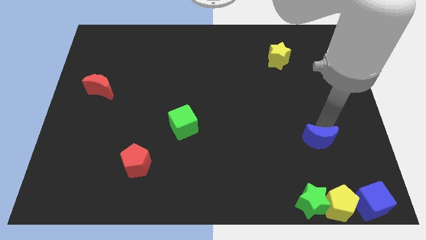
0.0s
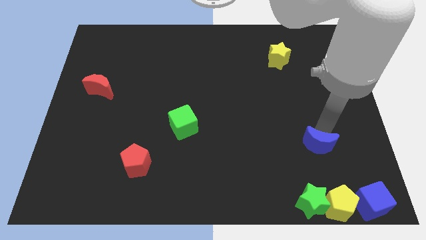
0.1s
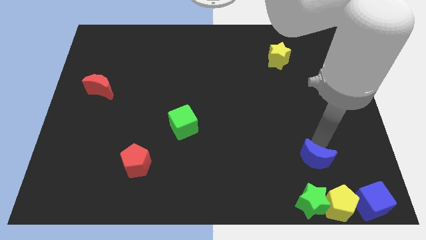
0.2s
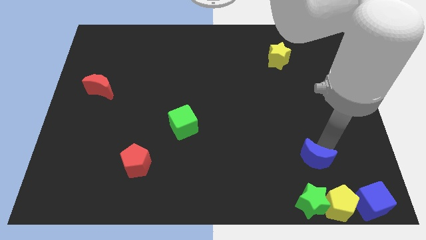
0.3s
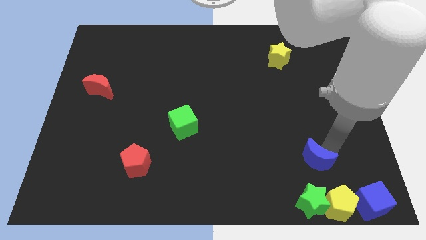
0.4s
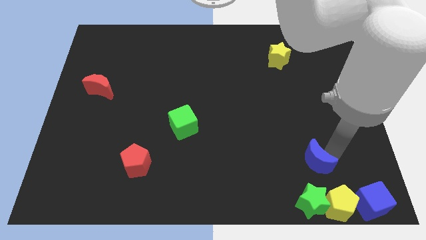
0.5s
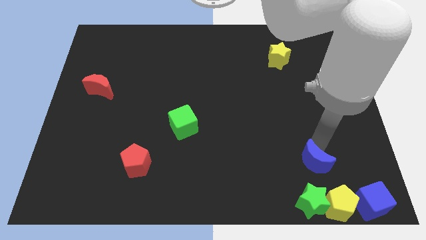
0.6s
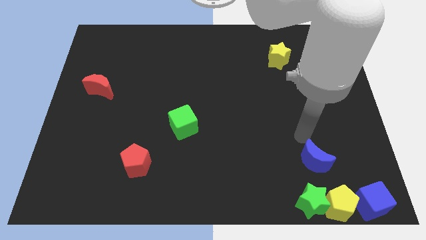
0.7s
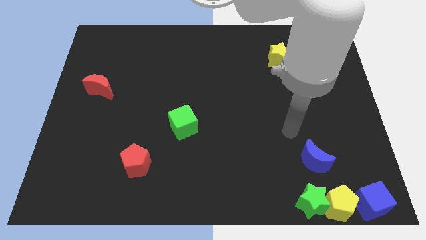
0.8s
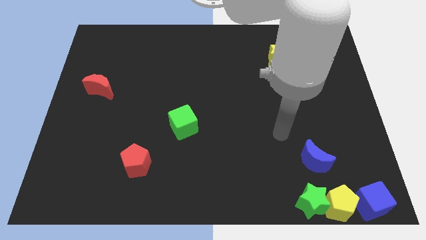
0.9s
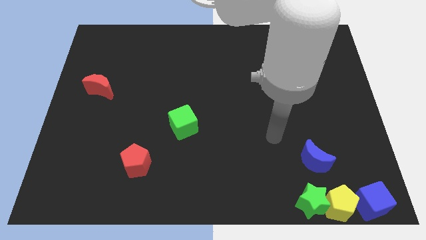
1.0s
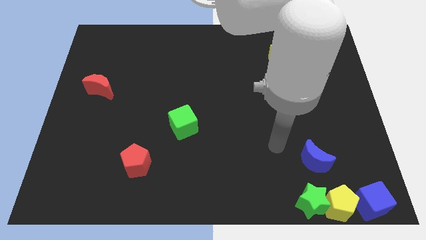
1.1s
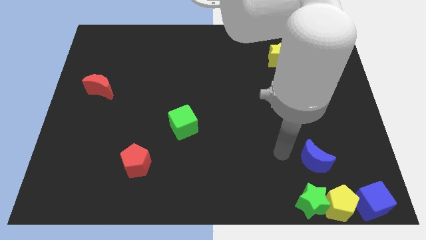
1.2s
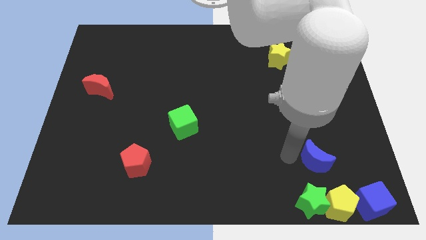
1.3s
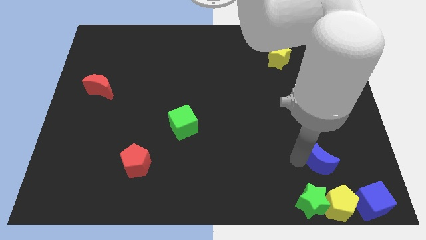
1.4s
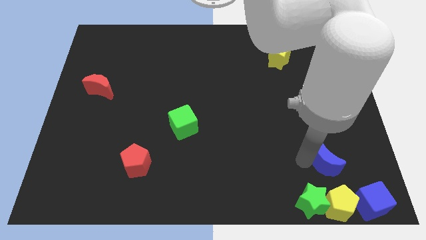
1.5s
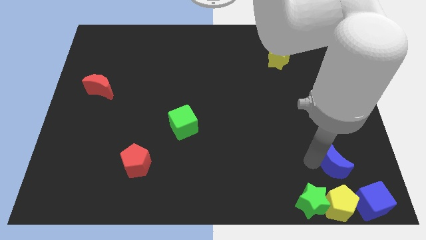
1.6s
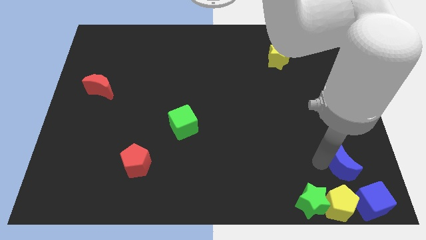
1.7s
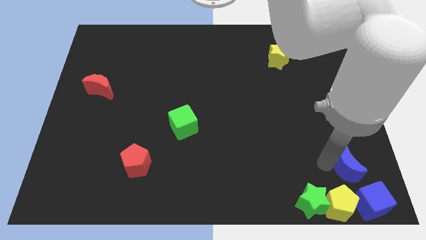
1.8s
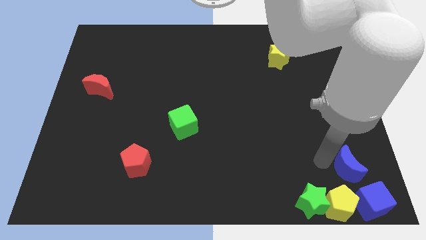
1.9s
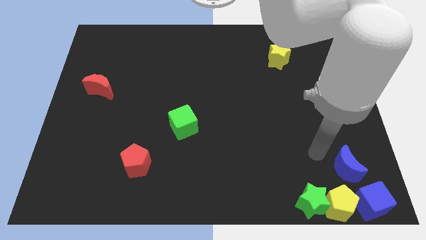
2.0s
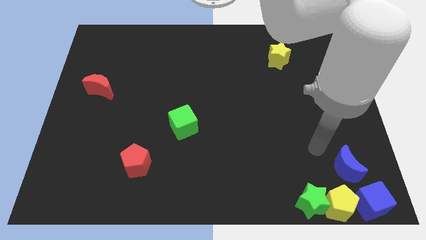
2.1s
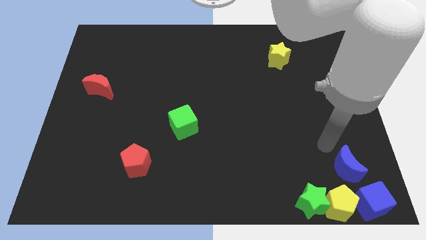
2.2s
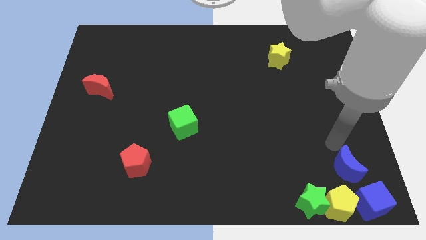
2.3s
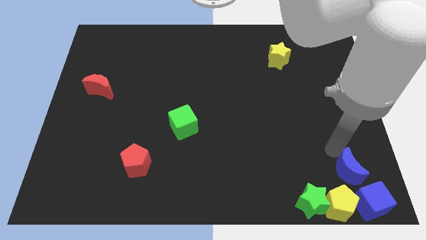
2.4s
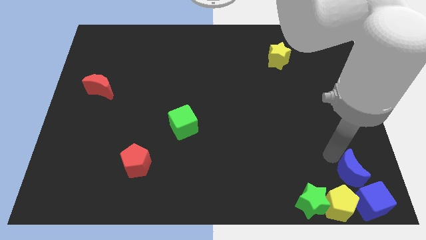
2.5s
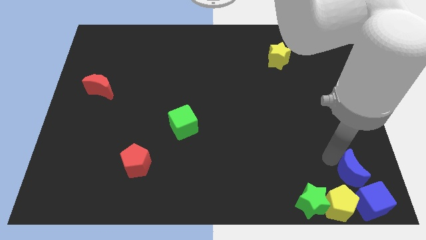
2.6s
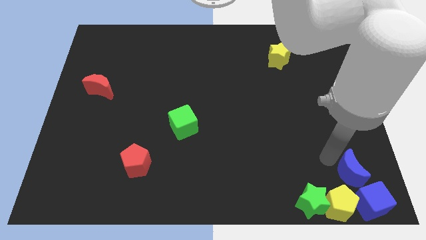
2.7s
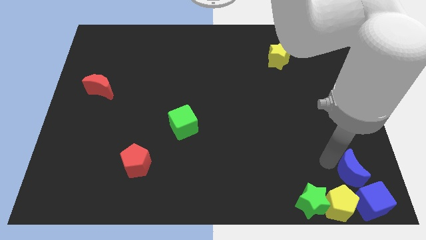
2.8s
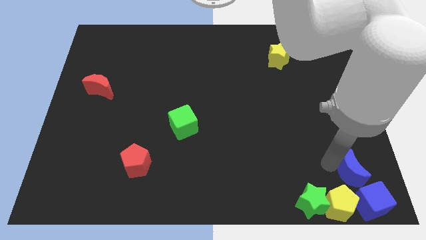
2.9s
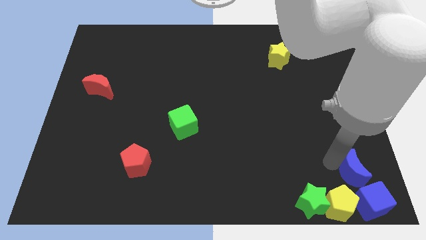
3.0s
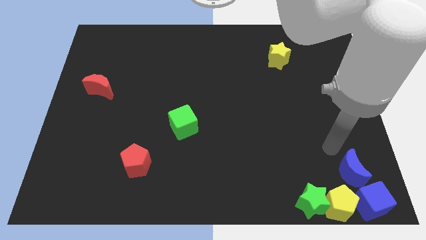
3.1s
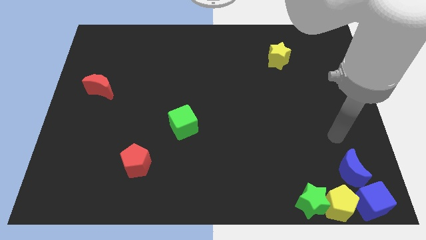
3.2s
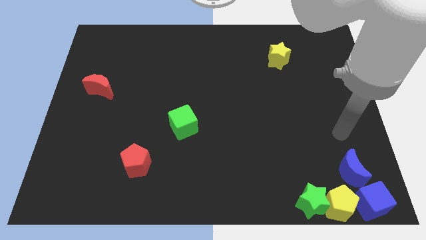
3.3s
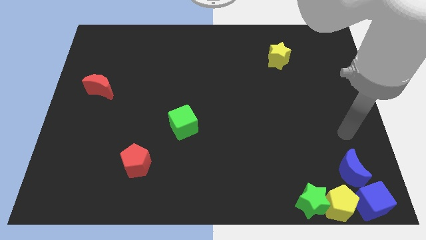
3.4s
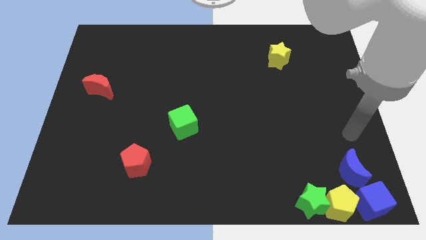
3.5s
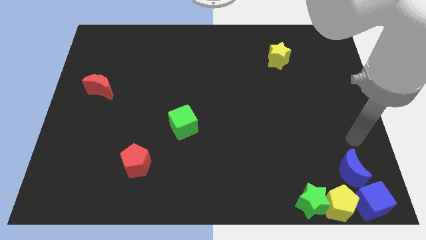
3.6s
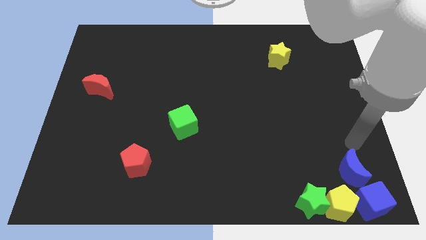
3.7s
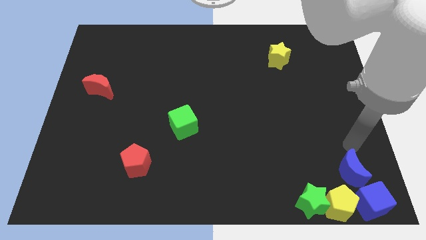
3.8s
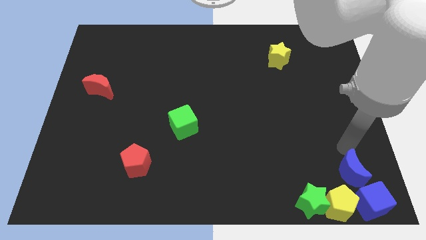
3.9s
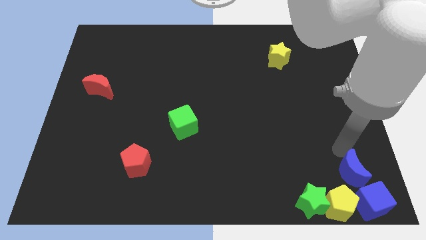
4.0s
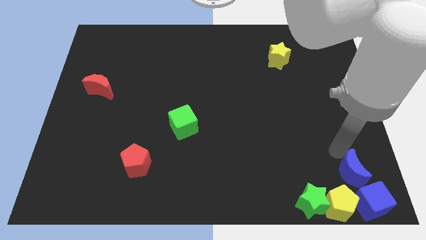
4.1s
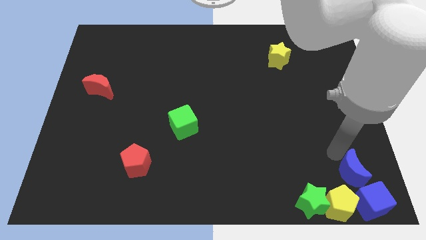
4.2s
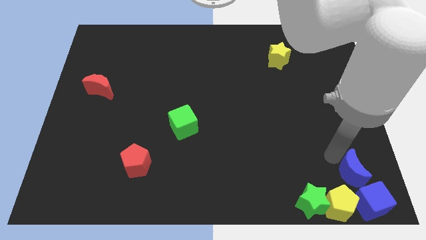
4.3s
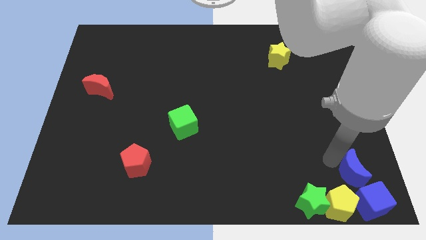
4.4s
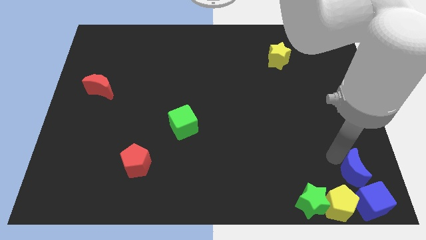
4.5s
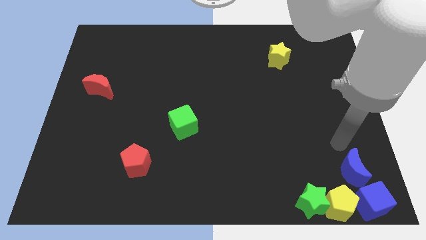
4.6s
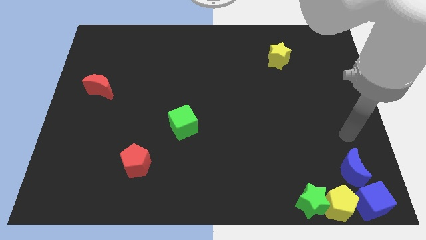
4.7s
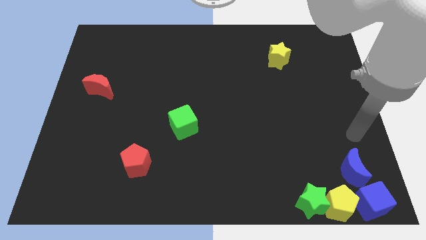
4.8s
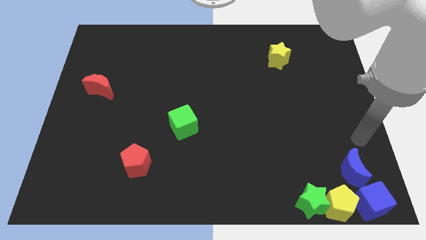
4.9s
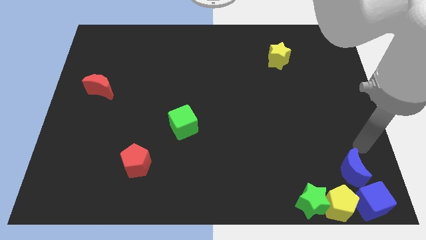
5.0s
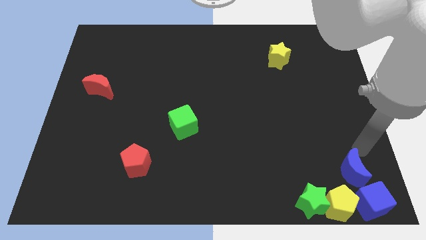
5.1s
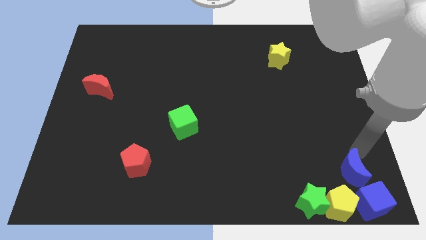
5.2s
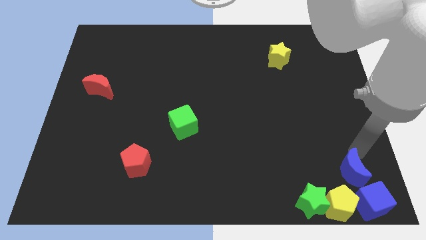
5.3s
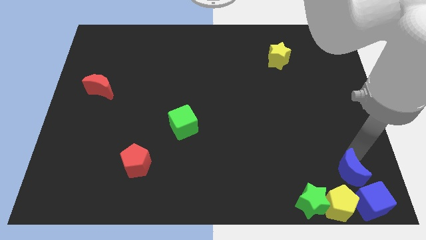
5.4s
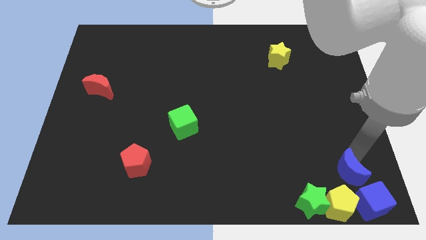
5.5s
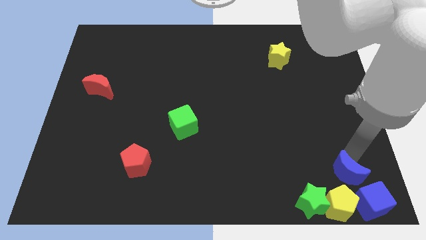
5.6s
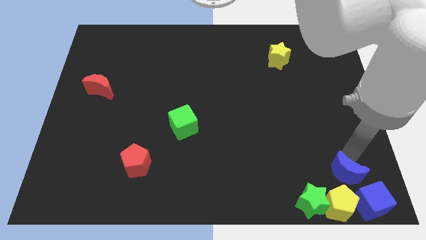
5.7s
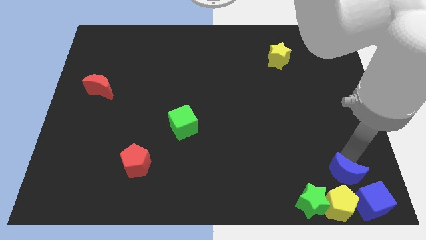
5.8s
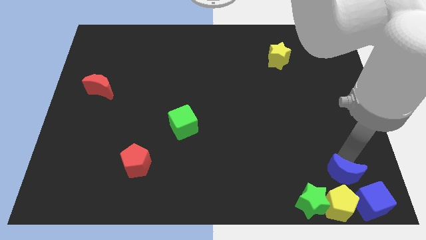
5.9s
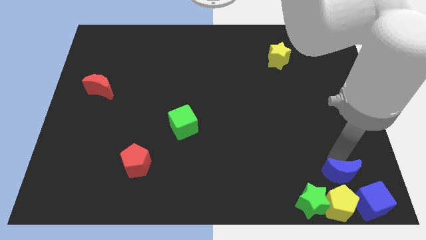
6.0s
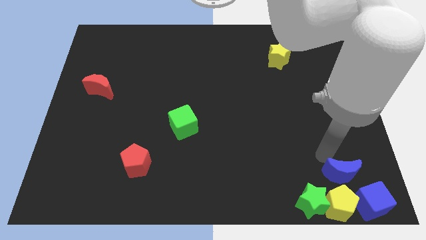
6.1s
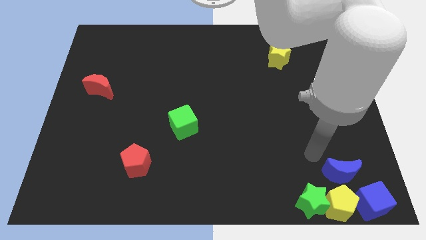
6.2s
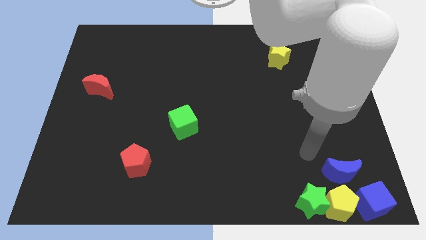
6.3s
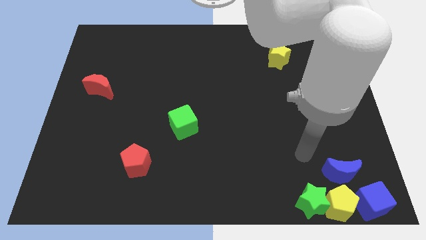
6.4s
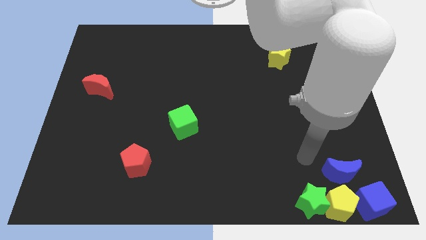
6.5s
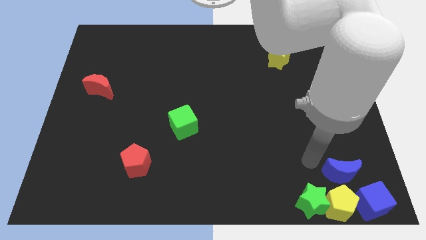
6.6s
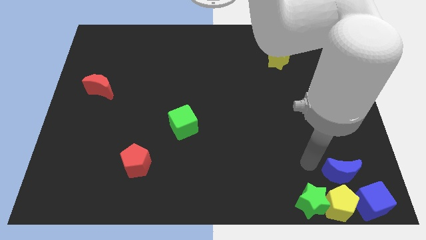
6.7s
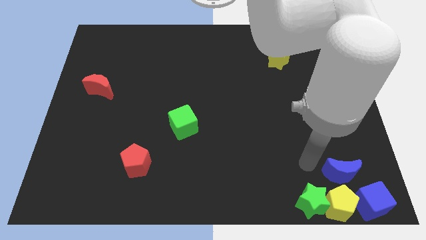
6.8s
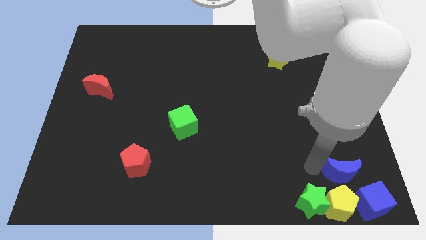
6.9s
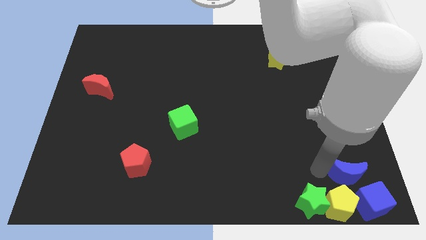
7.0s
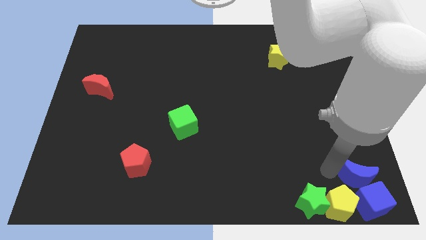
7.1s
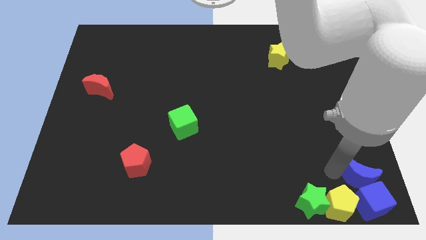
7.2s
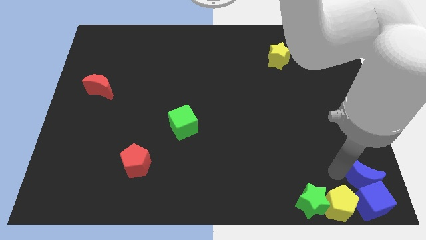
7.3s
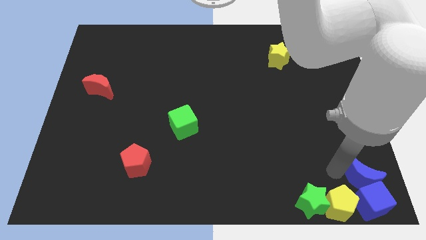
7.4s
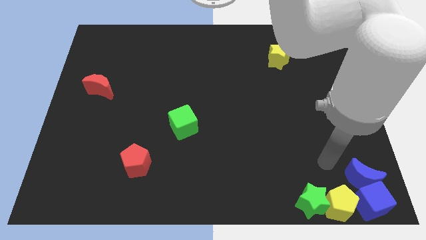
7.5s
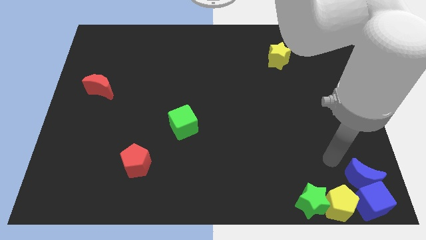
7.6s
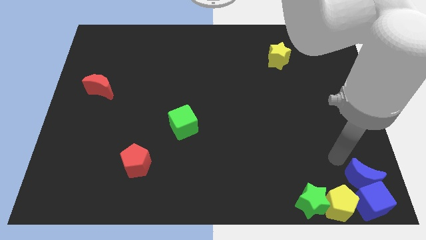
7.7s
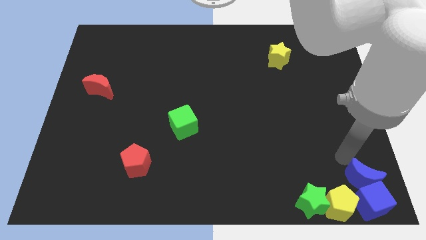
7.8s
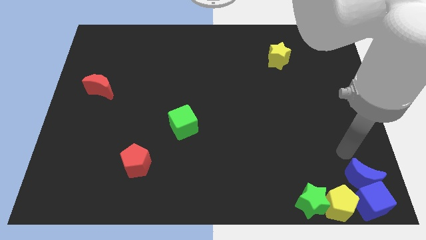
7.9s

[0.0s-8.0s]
place the blue crescent above the blue cube

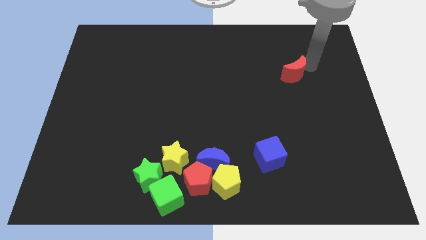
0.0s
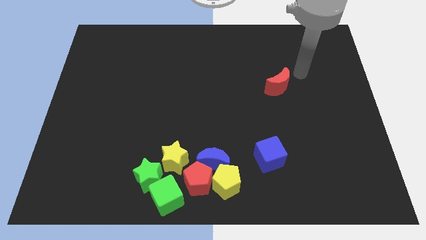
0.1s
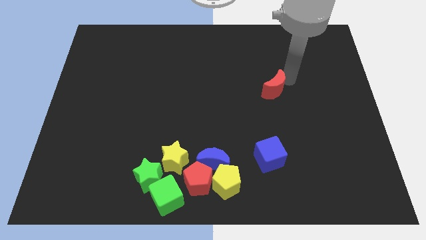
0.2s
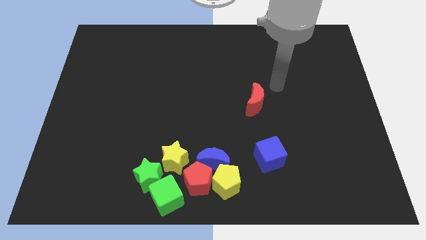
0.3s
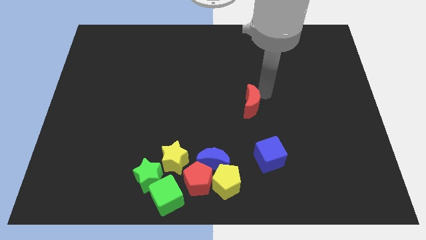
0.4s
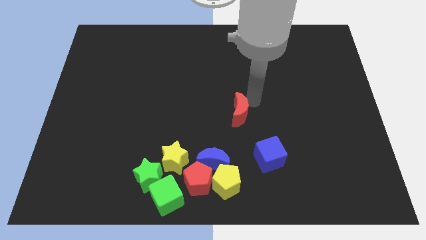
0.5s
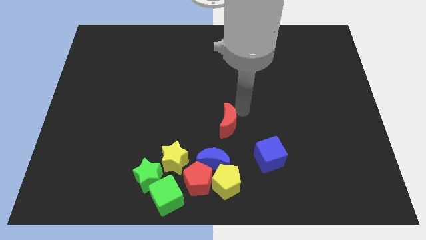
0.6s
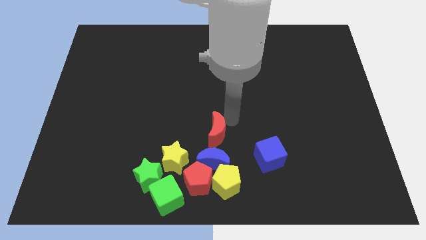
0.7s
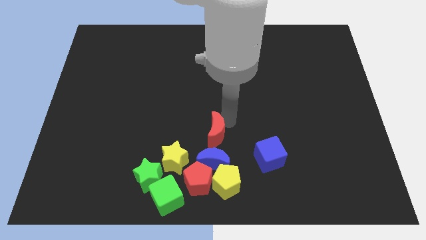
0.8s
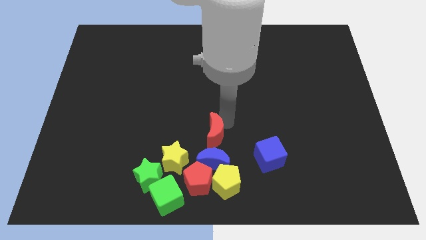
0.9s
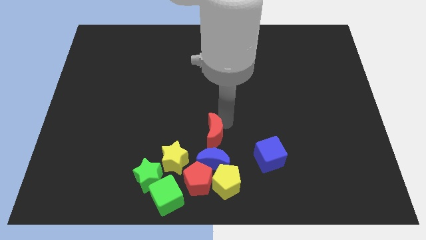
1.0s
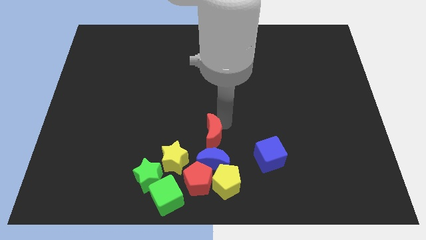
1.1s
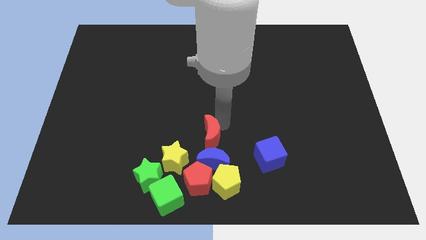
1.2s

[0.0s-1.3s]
move the red crescent above the blue moon
